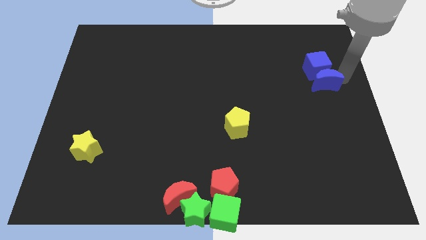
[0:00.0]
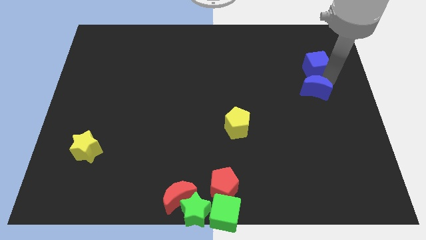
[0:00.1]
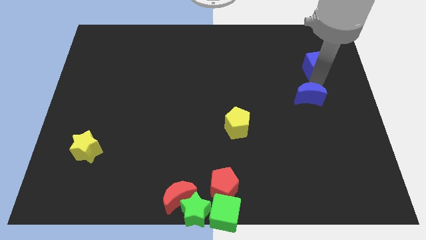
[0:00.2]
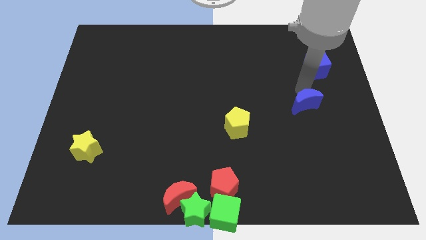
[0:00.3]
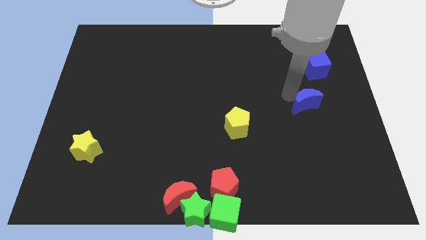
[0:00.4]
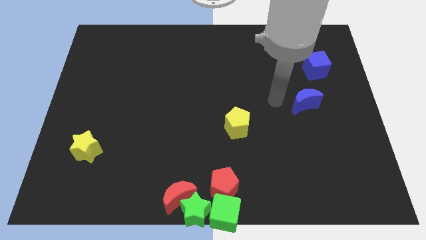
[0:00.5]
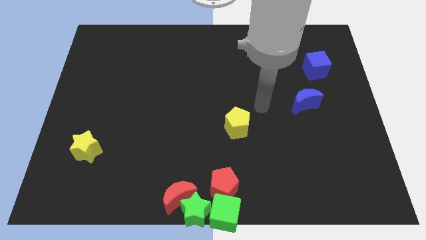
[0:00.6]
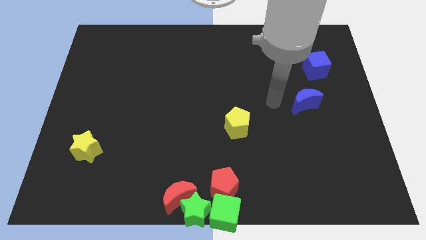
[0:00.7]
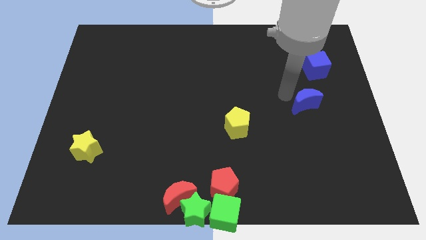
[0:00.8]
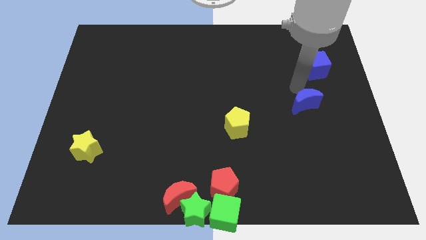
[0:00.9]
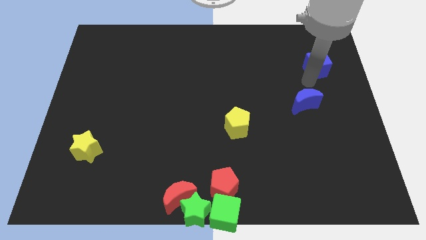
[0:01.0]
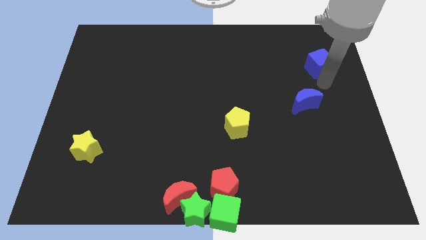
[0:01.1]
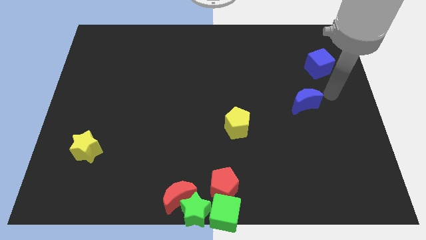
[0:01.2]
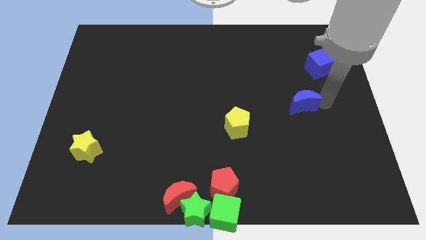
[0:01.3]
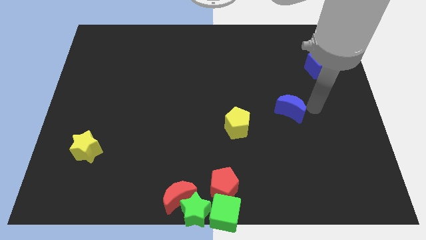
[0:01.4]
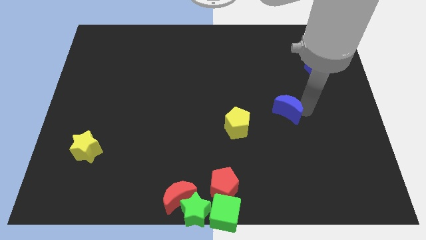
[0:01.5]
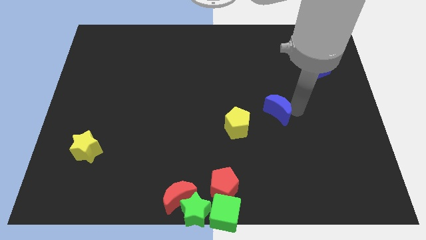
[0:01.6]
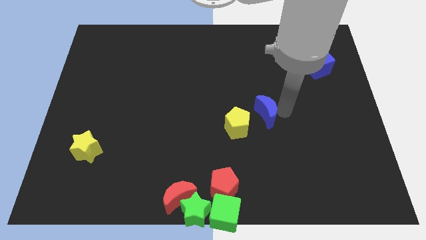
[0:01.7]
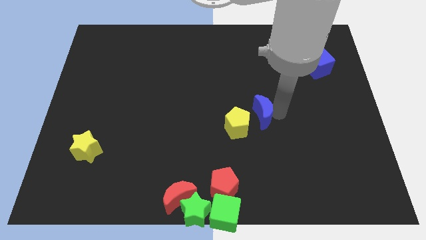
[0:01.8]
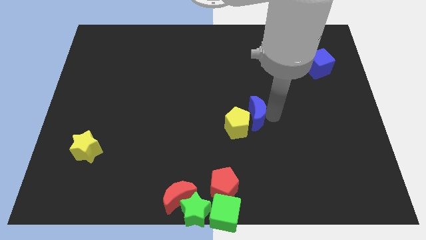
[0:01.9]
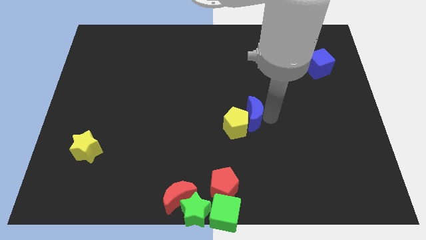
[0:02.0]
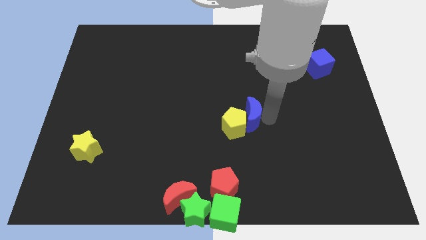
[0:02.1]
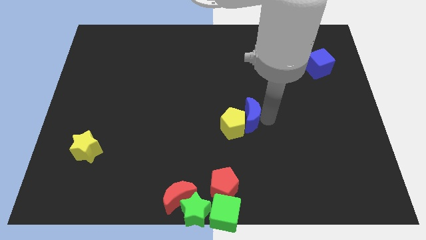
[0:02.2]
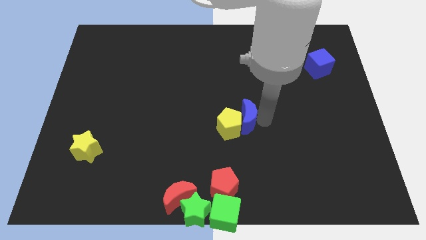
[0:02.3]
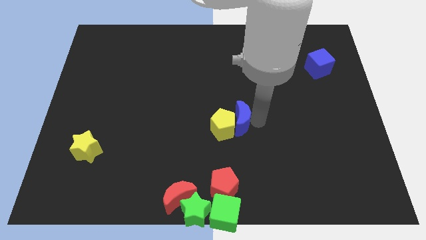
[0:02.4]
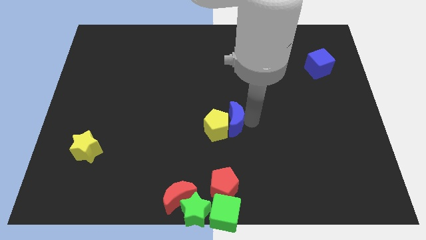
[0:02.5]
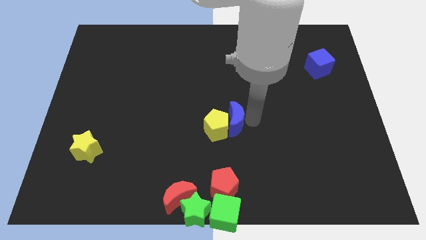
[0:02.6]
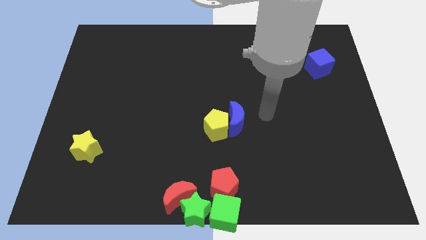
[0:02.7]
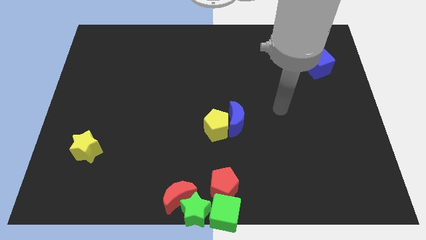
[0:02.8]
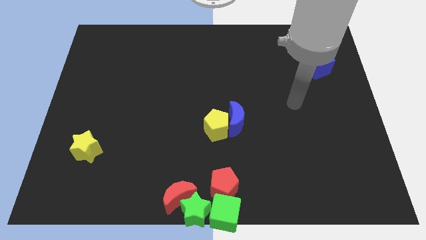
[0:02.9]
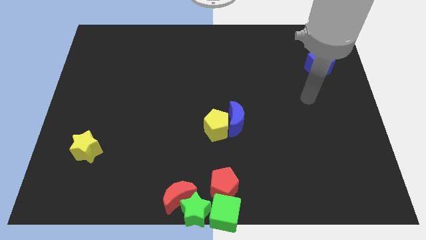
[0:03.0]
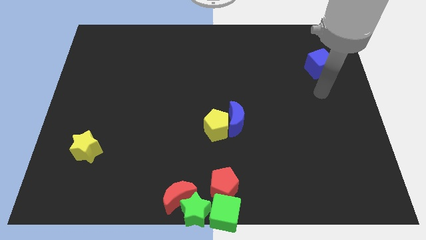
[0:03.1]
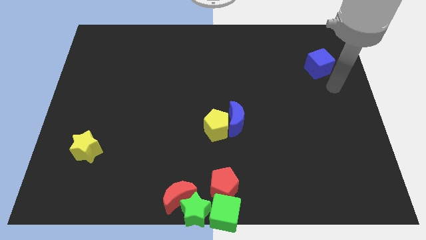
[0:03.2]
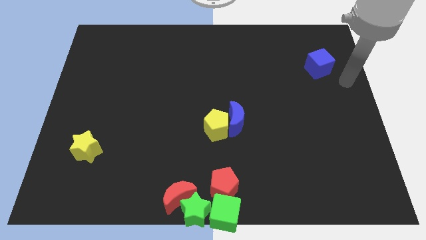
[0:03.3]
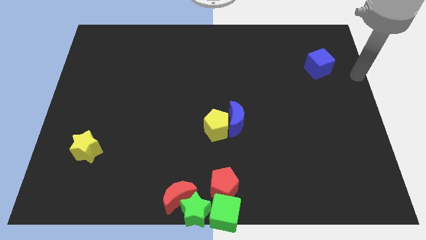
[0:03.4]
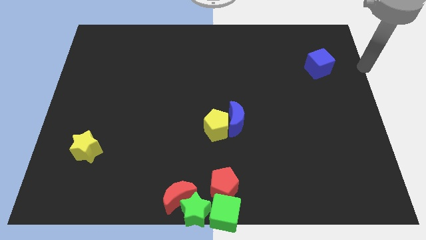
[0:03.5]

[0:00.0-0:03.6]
push the blue moon into the yellow pentagon

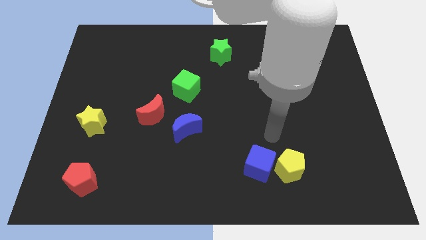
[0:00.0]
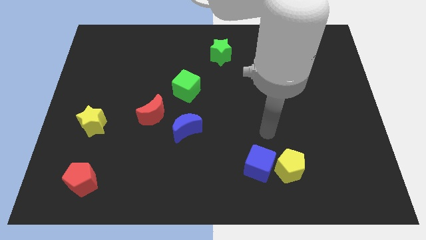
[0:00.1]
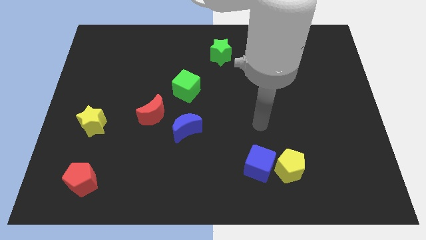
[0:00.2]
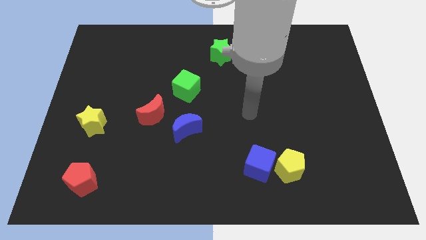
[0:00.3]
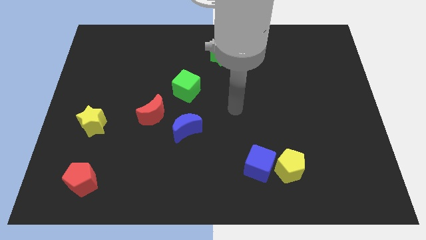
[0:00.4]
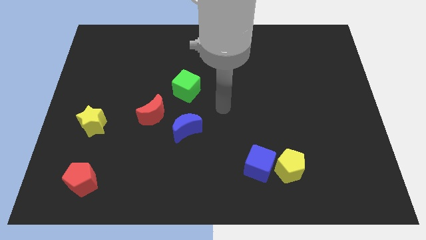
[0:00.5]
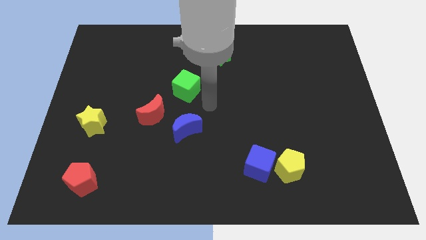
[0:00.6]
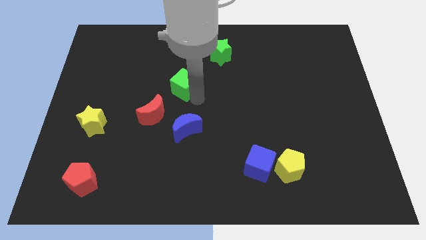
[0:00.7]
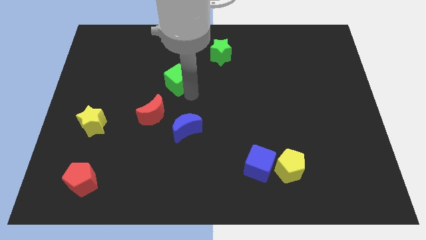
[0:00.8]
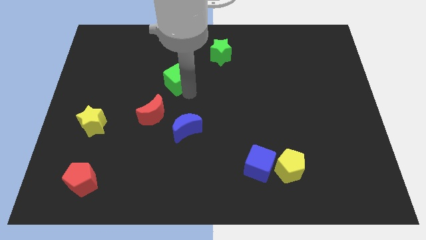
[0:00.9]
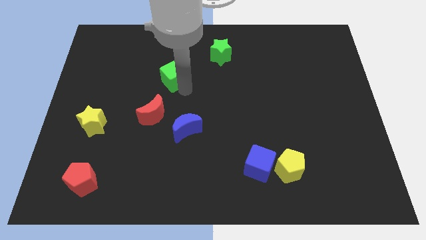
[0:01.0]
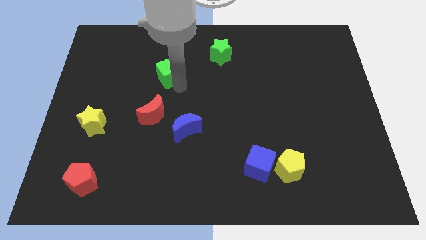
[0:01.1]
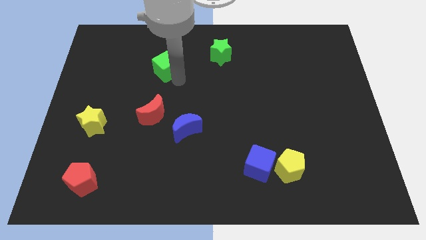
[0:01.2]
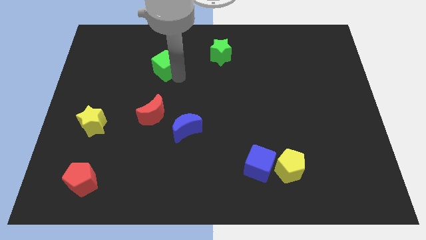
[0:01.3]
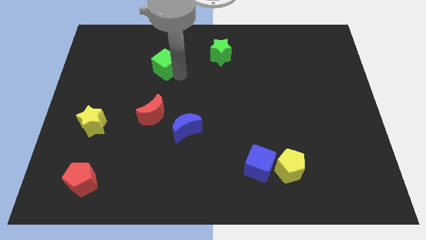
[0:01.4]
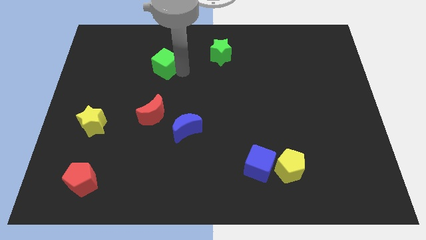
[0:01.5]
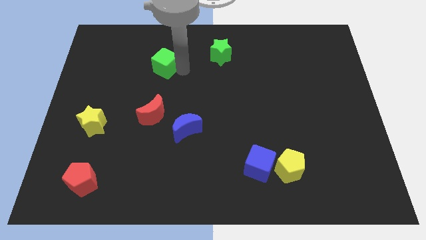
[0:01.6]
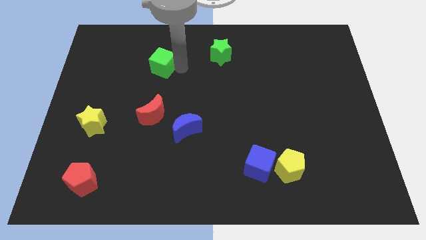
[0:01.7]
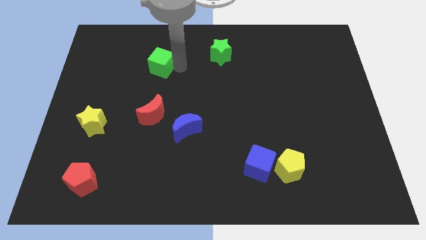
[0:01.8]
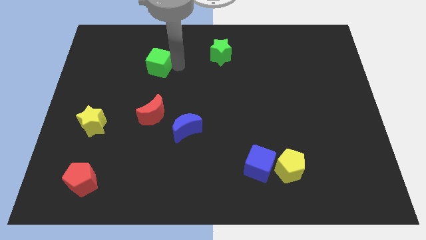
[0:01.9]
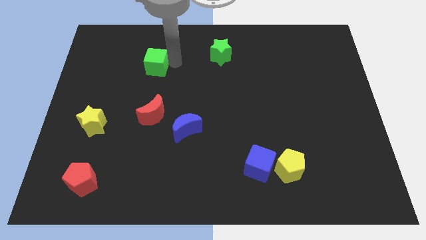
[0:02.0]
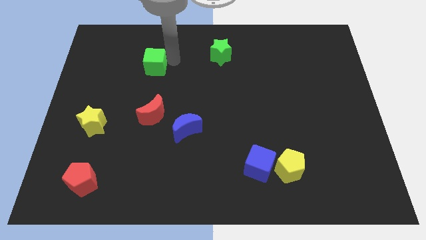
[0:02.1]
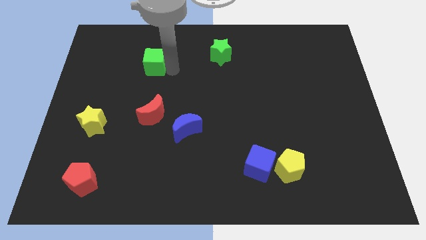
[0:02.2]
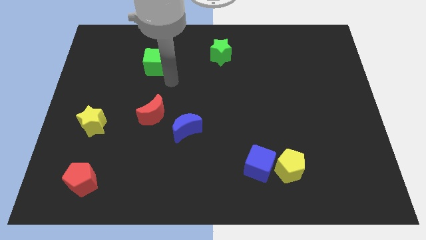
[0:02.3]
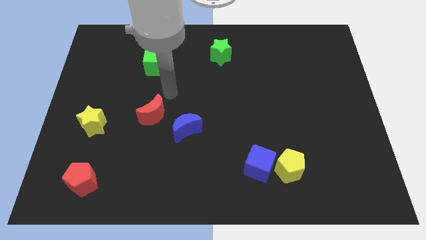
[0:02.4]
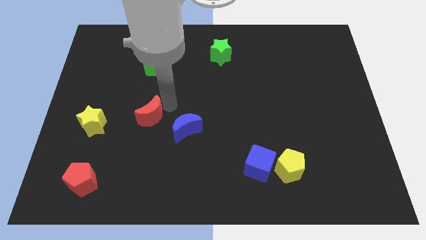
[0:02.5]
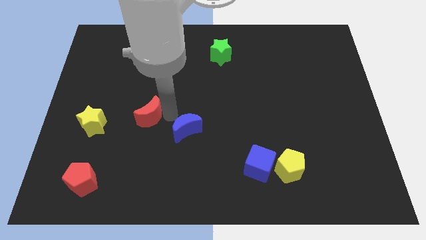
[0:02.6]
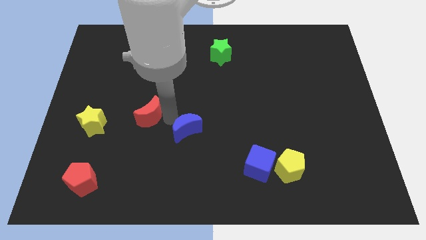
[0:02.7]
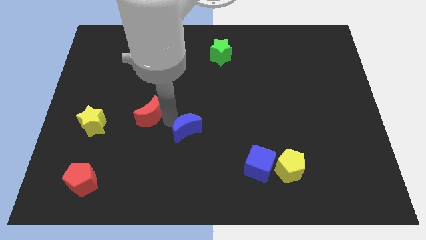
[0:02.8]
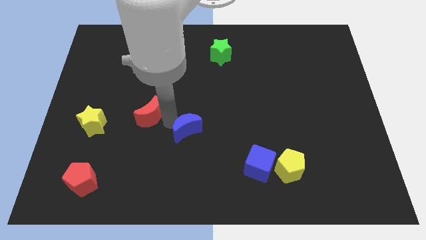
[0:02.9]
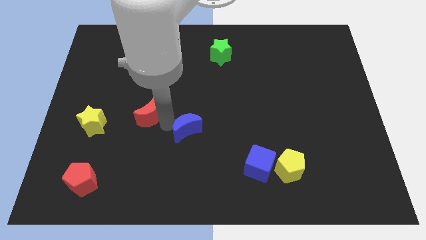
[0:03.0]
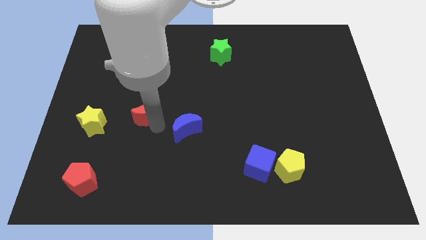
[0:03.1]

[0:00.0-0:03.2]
slightly move the green cube upwards of the board

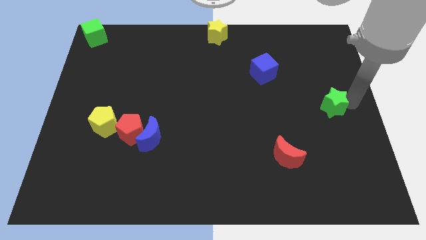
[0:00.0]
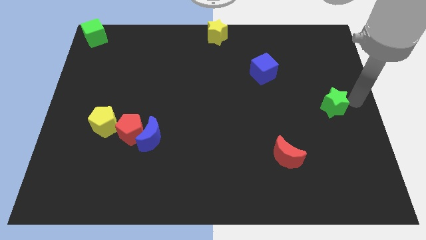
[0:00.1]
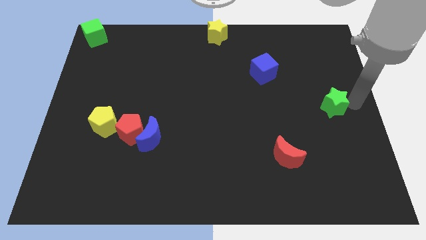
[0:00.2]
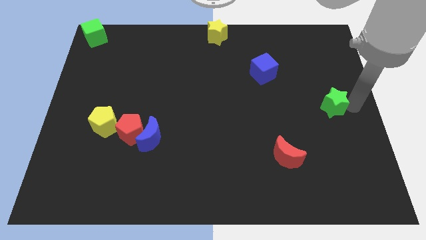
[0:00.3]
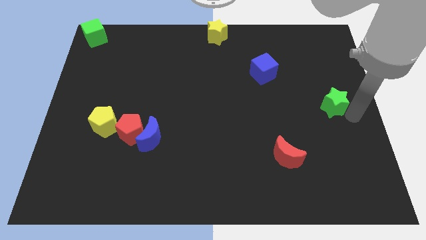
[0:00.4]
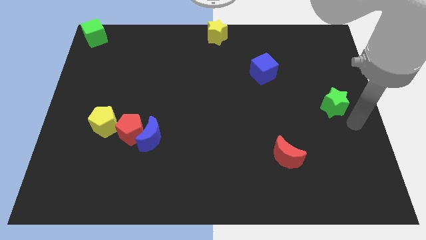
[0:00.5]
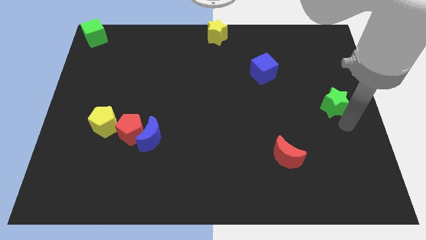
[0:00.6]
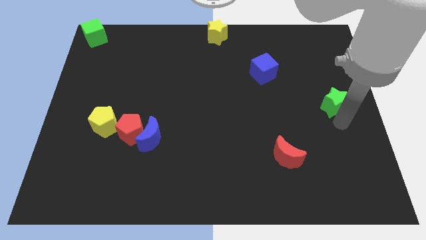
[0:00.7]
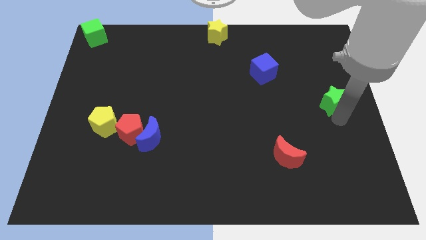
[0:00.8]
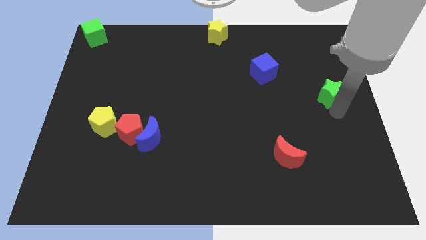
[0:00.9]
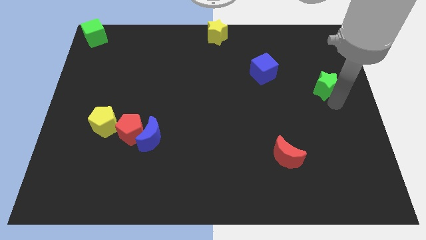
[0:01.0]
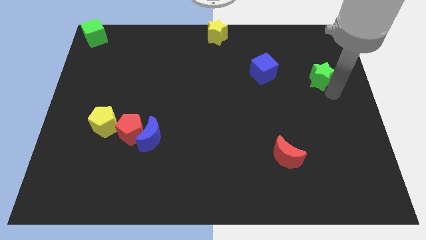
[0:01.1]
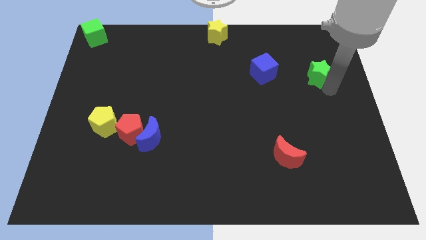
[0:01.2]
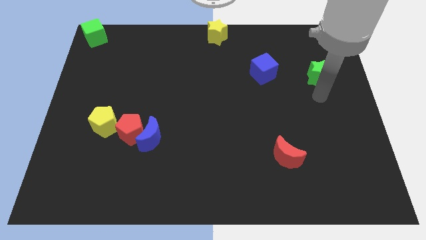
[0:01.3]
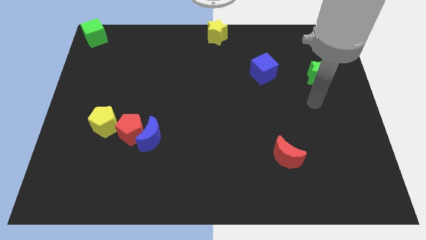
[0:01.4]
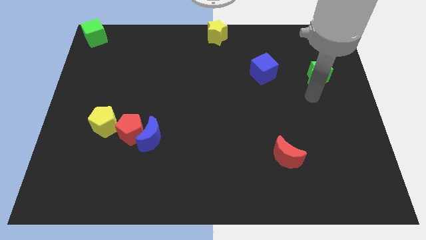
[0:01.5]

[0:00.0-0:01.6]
put the green star at the right side of the blue cube

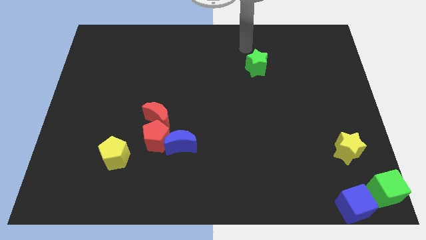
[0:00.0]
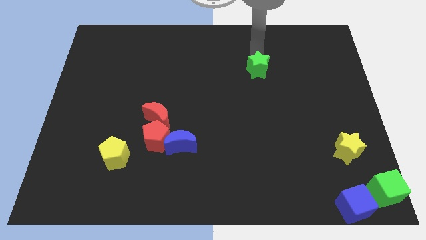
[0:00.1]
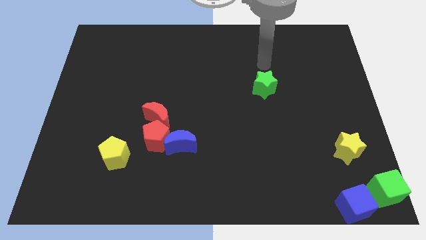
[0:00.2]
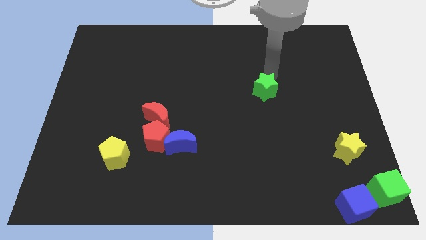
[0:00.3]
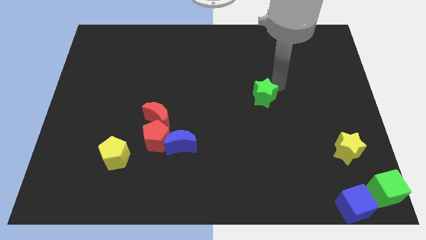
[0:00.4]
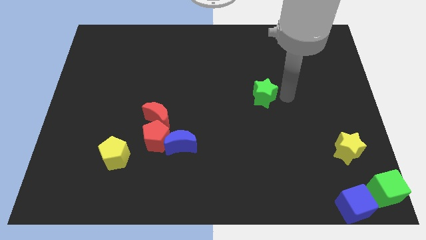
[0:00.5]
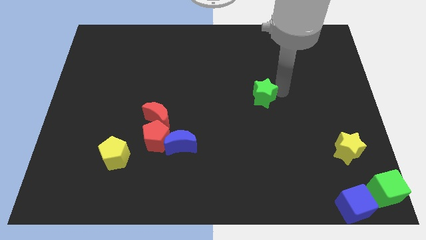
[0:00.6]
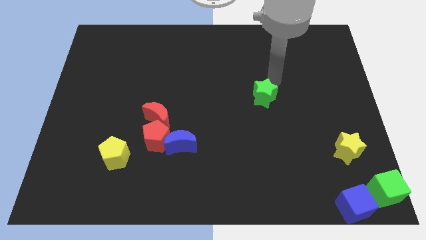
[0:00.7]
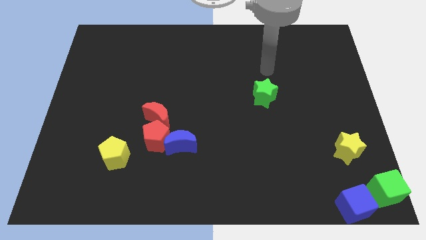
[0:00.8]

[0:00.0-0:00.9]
slide the green star towards the bottom
